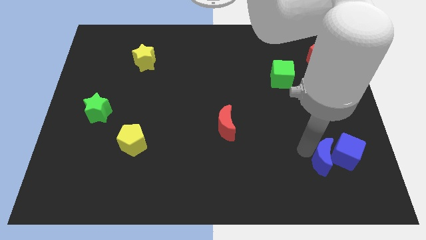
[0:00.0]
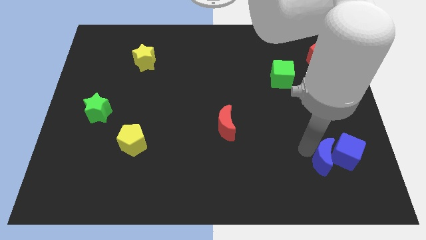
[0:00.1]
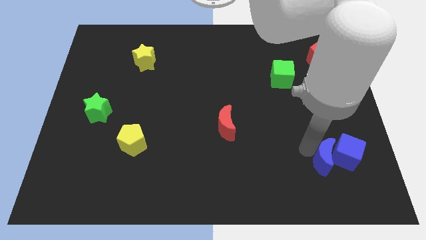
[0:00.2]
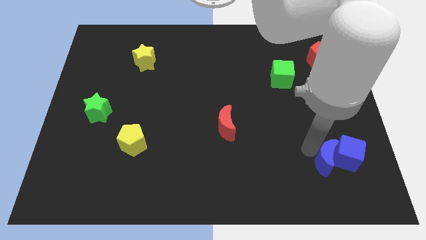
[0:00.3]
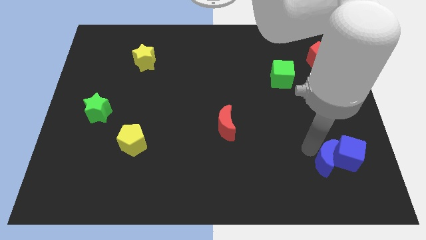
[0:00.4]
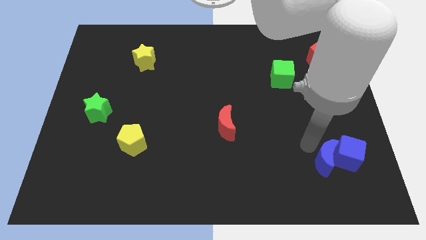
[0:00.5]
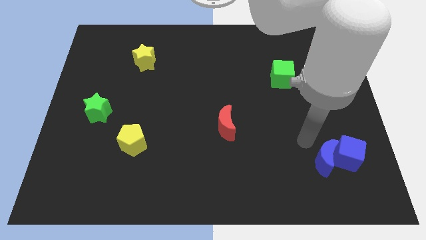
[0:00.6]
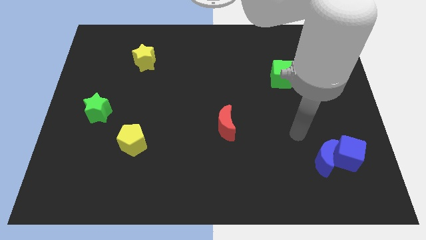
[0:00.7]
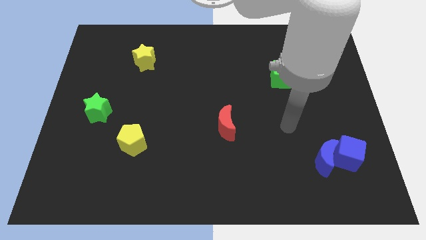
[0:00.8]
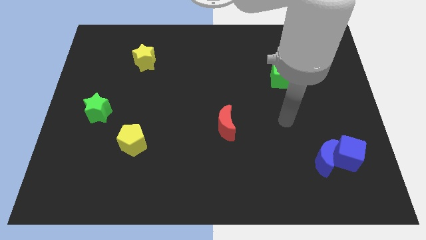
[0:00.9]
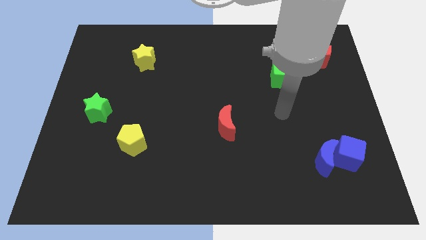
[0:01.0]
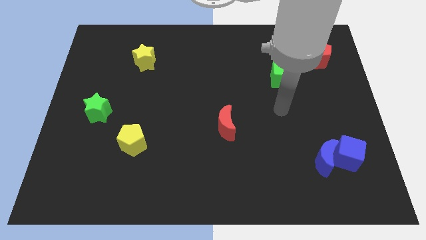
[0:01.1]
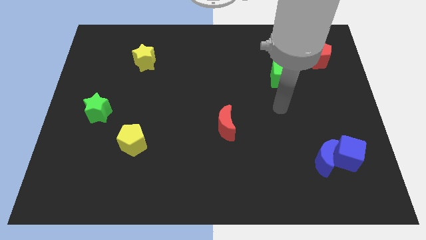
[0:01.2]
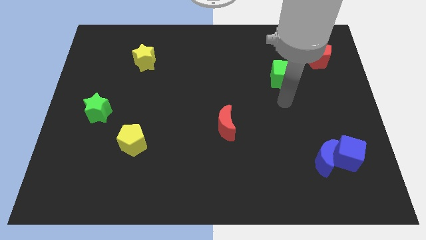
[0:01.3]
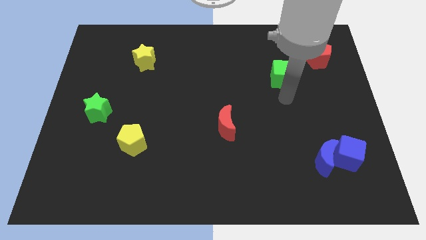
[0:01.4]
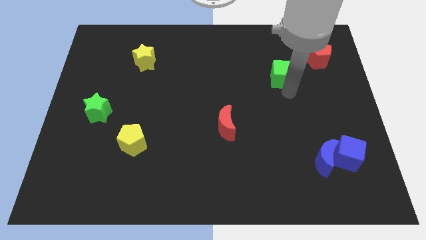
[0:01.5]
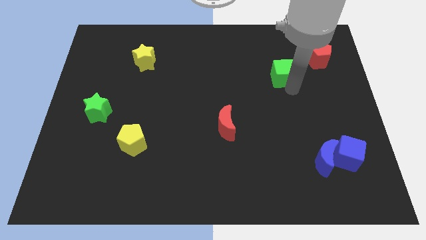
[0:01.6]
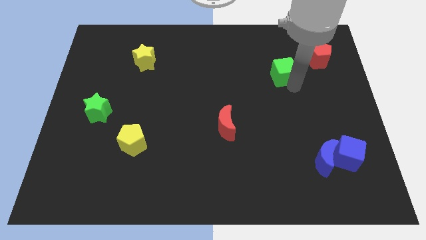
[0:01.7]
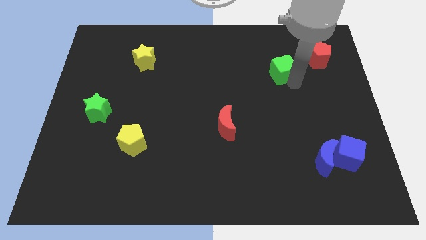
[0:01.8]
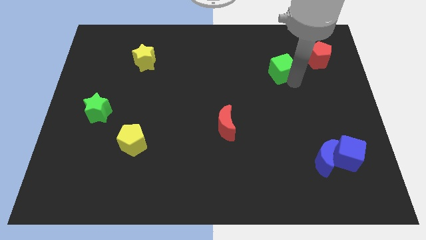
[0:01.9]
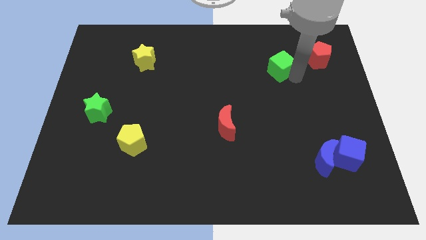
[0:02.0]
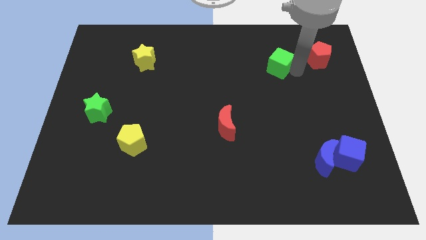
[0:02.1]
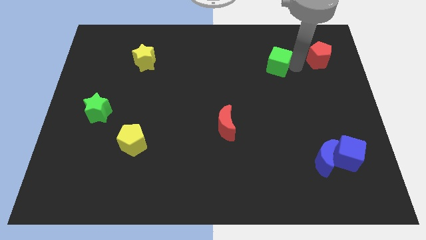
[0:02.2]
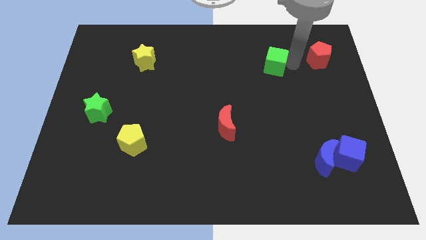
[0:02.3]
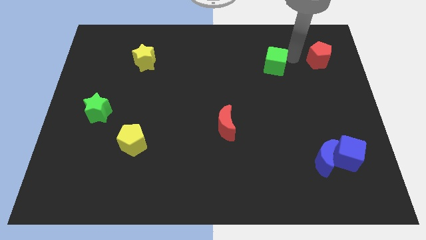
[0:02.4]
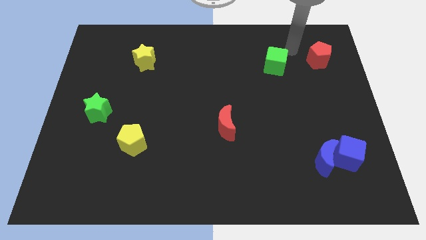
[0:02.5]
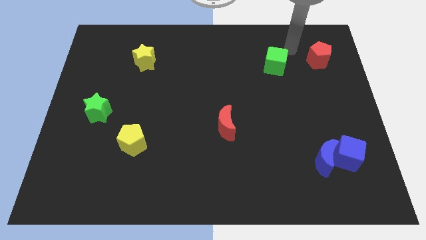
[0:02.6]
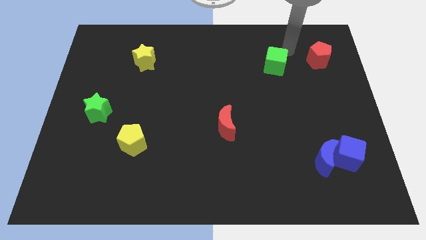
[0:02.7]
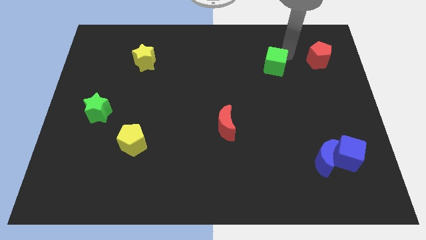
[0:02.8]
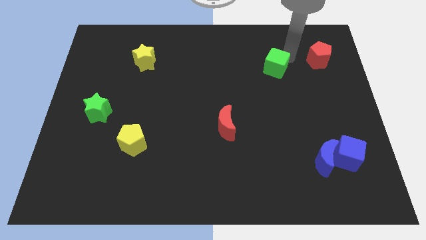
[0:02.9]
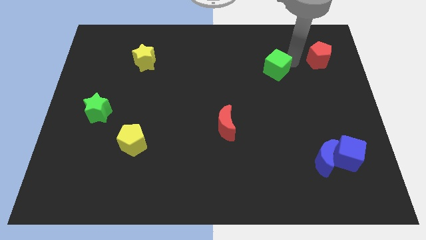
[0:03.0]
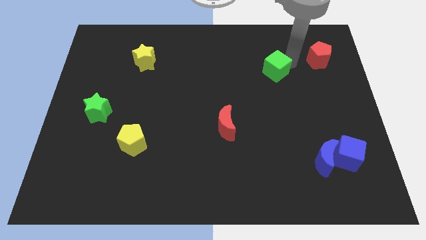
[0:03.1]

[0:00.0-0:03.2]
tap the right edge of green cube

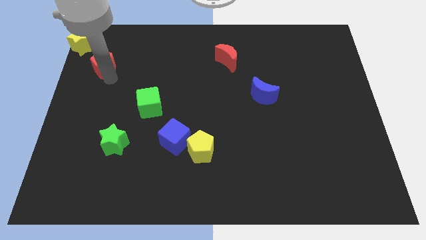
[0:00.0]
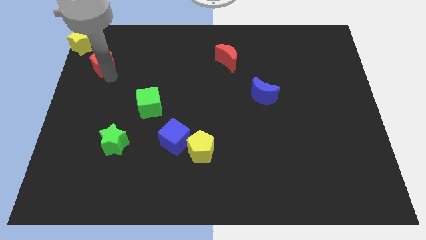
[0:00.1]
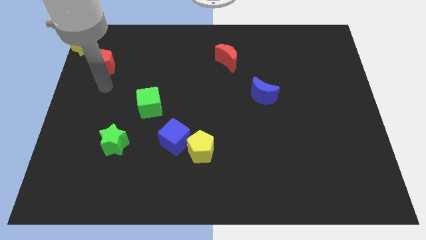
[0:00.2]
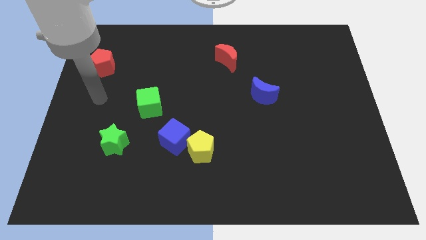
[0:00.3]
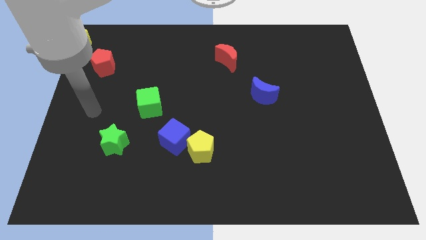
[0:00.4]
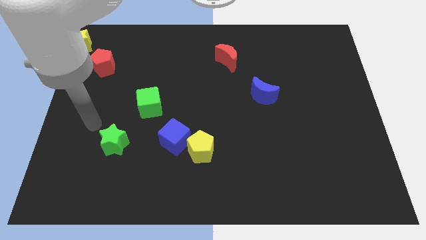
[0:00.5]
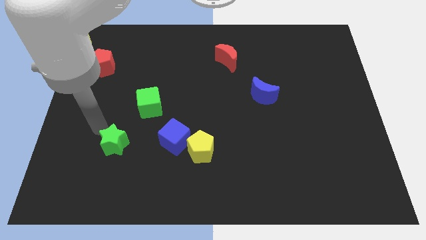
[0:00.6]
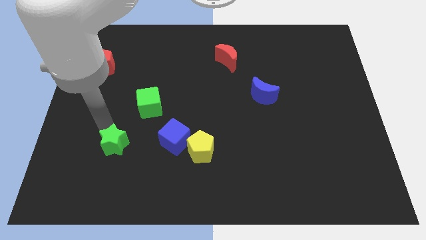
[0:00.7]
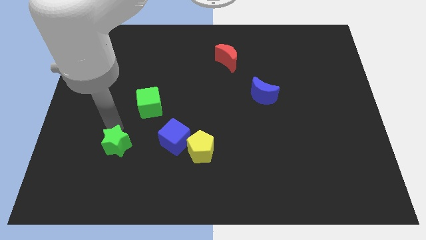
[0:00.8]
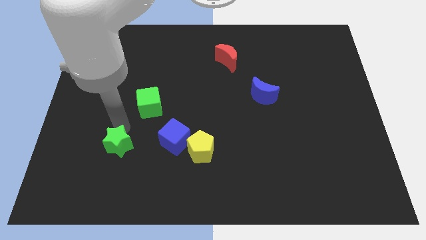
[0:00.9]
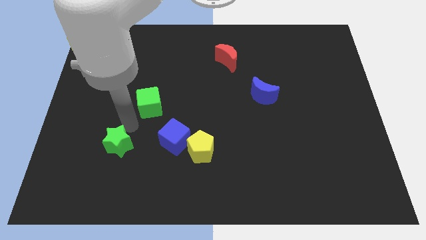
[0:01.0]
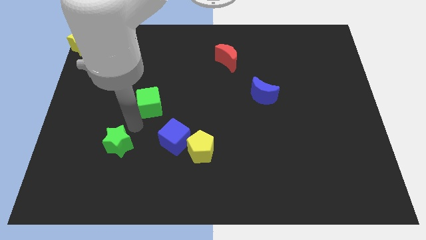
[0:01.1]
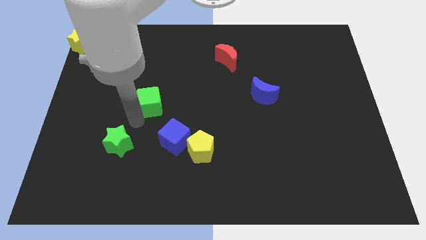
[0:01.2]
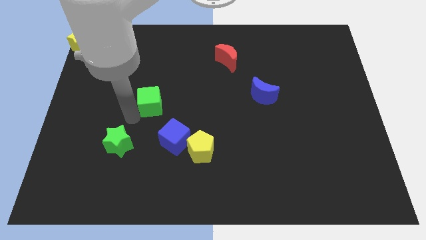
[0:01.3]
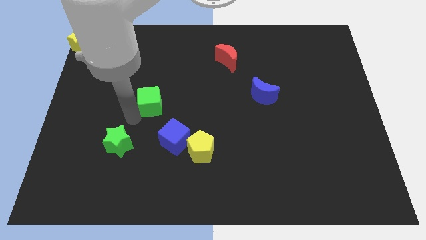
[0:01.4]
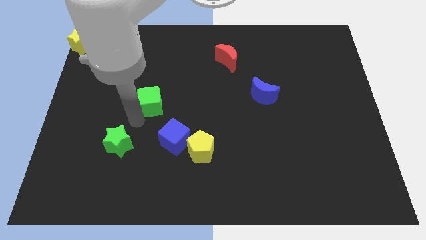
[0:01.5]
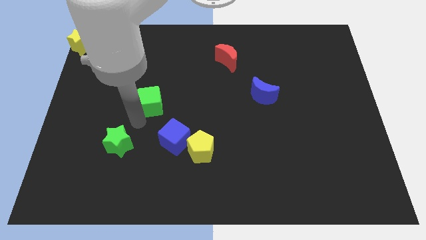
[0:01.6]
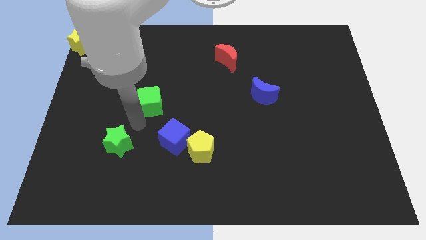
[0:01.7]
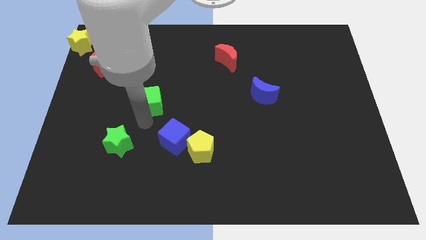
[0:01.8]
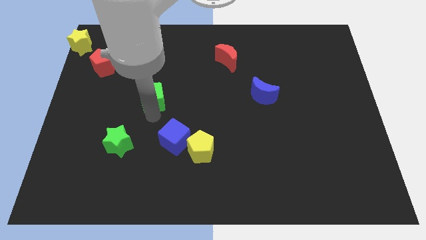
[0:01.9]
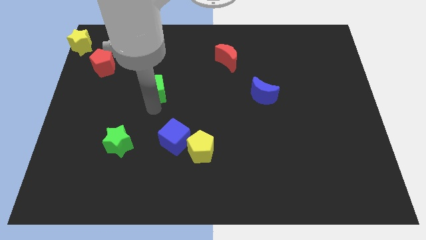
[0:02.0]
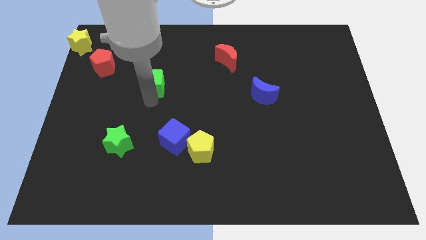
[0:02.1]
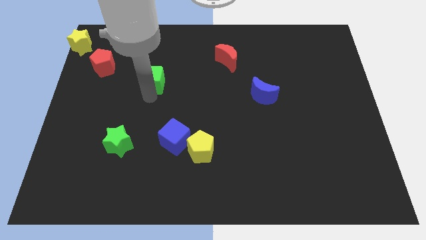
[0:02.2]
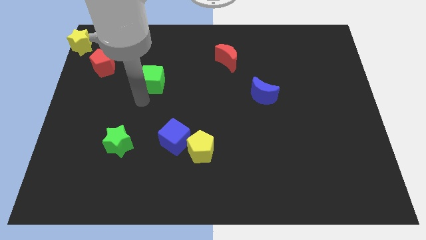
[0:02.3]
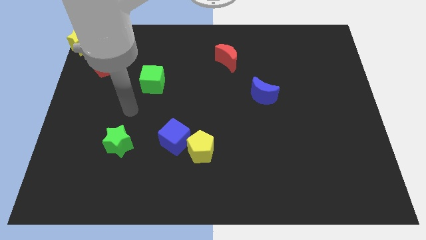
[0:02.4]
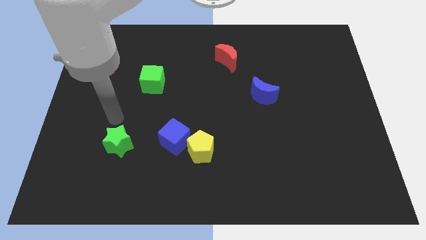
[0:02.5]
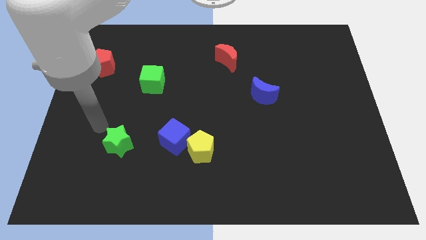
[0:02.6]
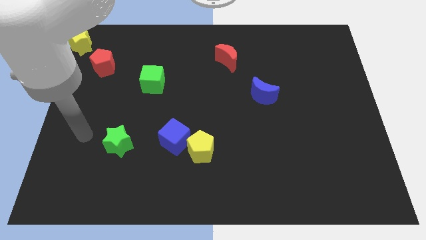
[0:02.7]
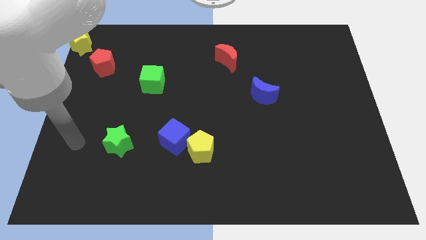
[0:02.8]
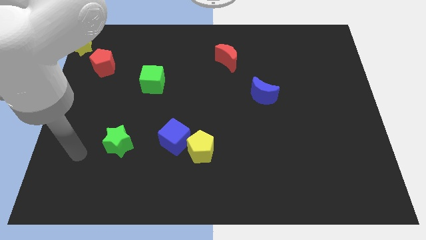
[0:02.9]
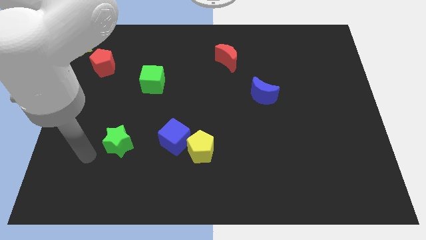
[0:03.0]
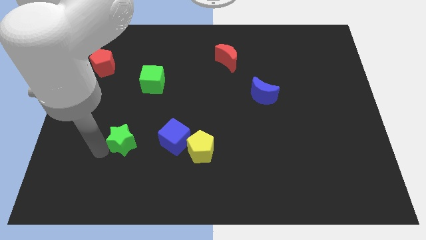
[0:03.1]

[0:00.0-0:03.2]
move the green cube slightly to the top

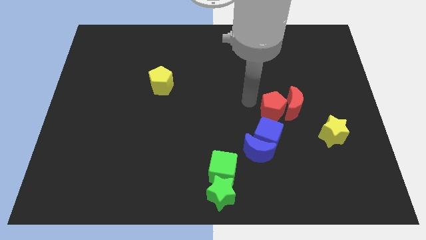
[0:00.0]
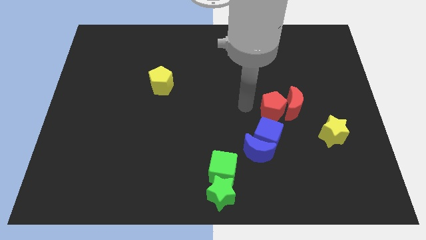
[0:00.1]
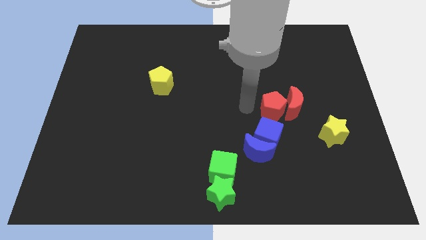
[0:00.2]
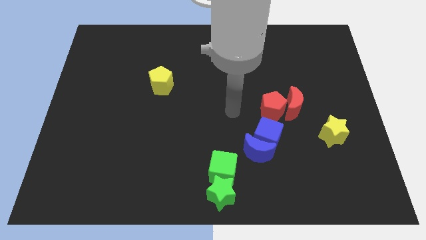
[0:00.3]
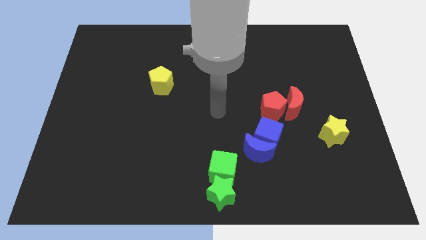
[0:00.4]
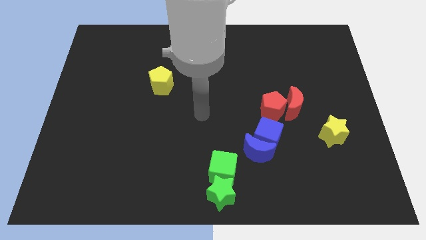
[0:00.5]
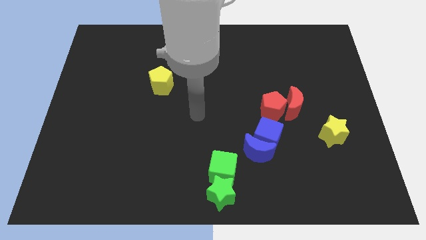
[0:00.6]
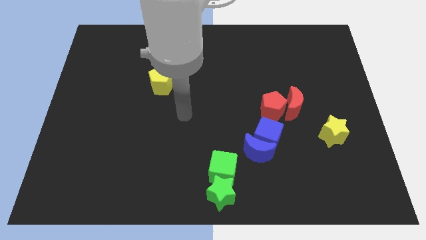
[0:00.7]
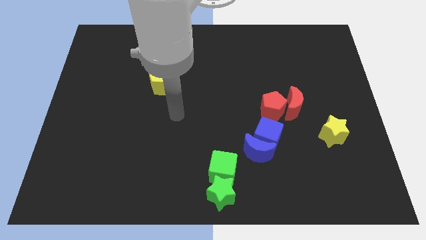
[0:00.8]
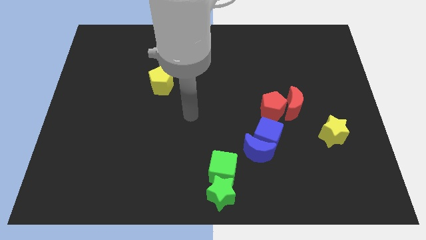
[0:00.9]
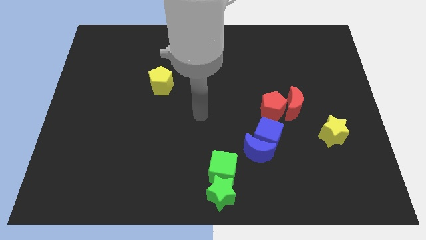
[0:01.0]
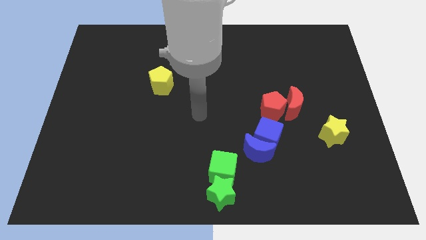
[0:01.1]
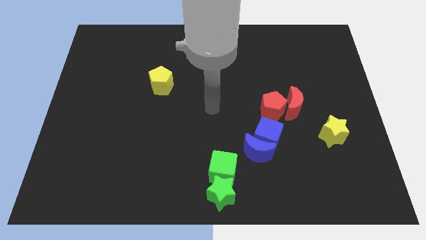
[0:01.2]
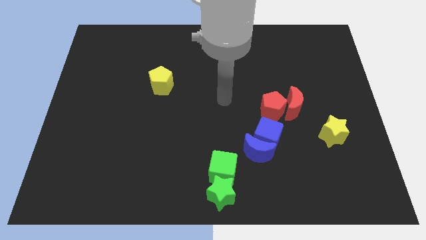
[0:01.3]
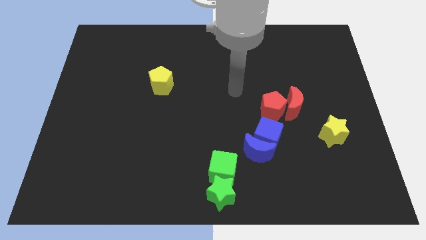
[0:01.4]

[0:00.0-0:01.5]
move your hand away from the red pentagon

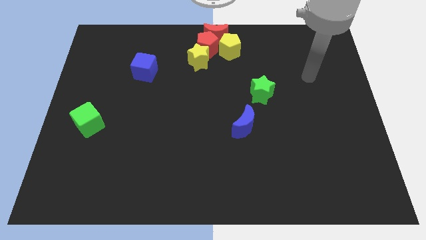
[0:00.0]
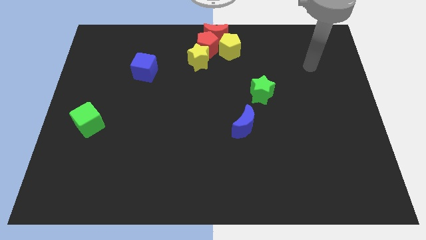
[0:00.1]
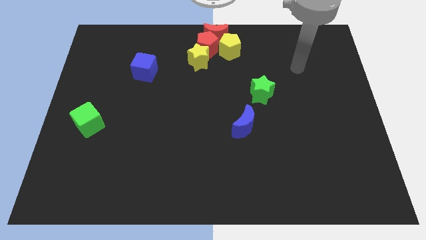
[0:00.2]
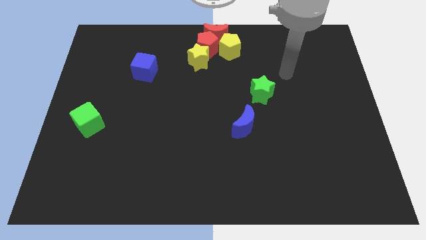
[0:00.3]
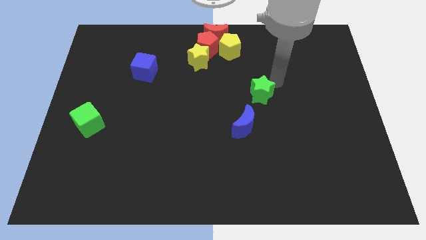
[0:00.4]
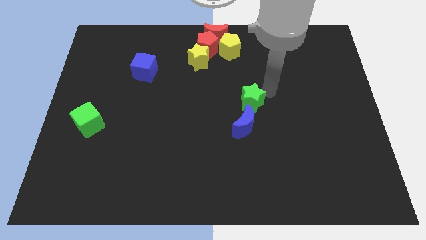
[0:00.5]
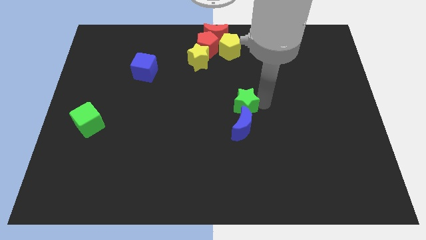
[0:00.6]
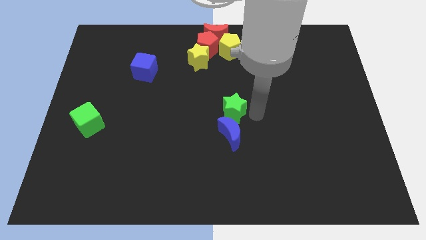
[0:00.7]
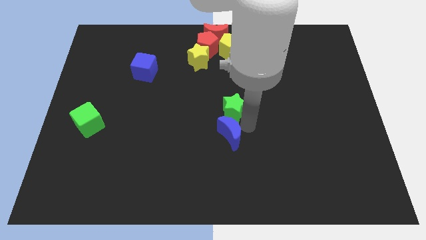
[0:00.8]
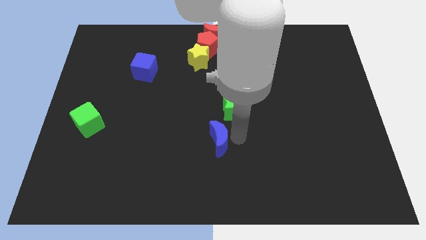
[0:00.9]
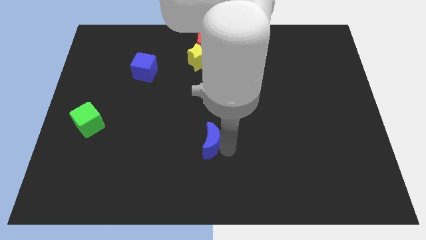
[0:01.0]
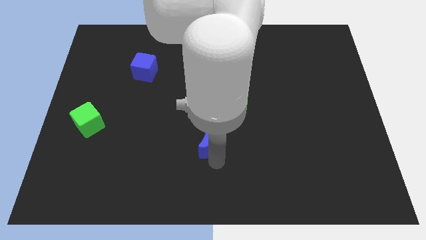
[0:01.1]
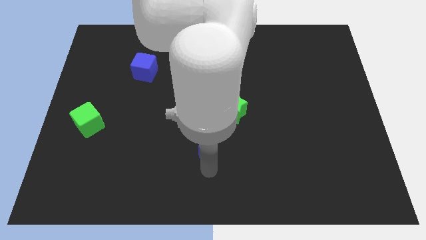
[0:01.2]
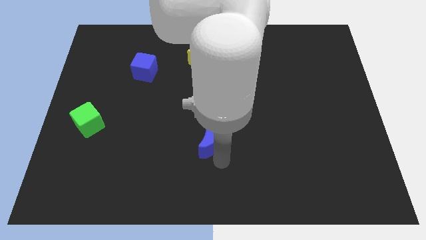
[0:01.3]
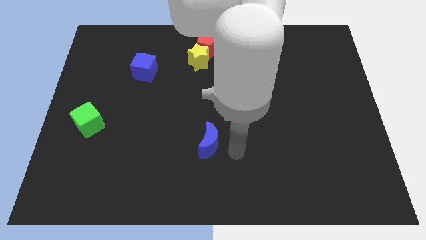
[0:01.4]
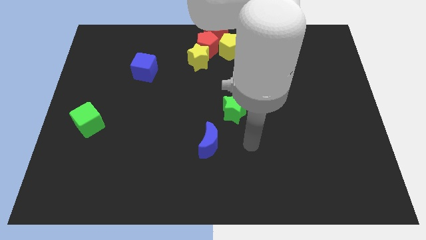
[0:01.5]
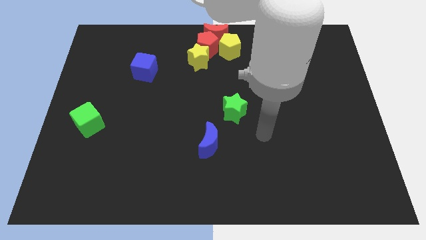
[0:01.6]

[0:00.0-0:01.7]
push green star into blue crescent
